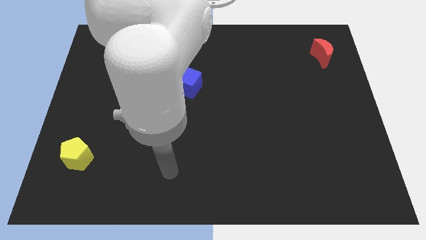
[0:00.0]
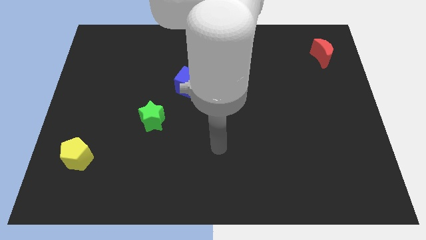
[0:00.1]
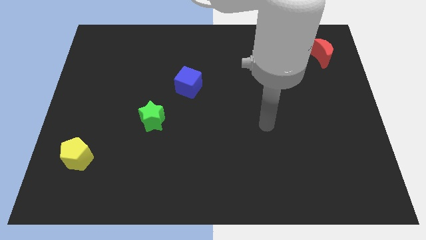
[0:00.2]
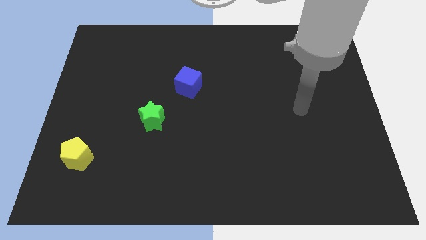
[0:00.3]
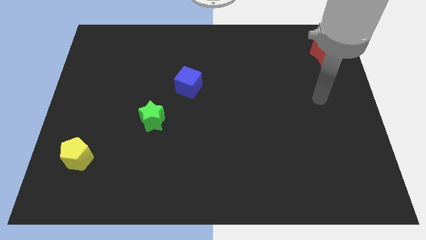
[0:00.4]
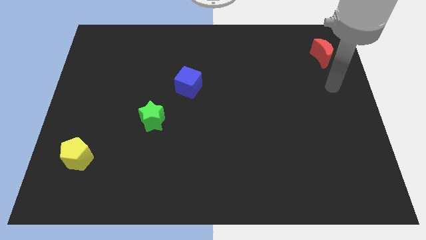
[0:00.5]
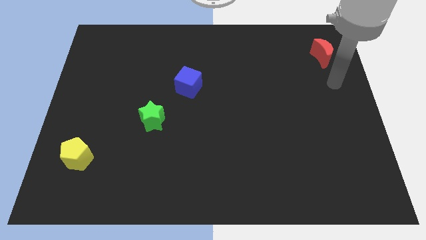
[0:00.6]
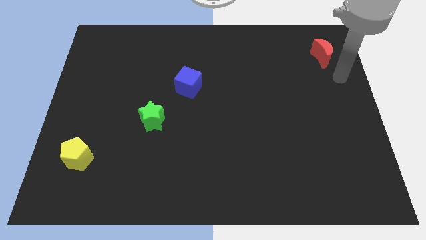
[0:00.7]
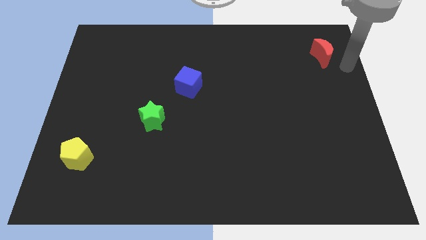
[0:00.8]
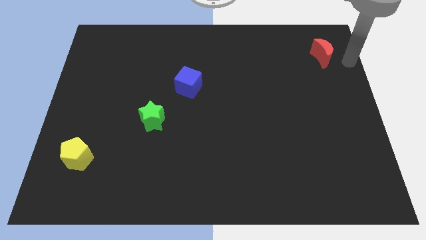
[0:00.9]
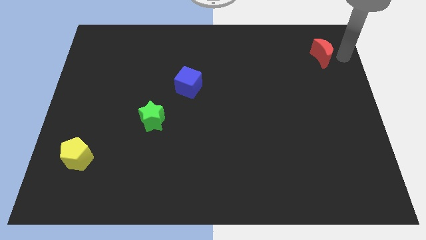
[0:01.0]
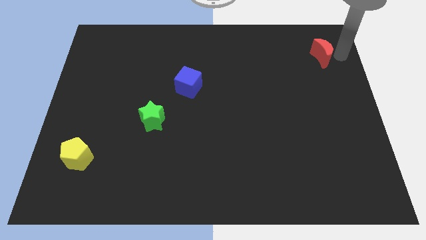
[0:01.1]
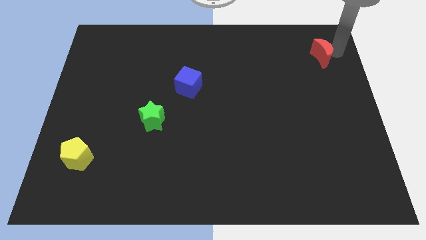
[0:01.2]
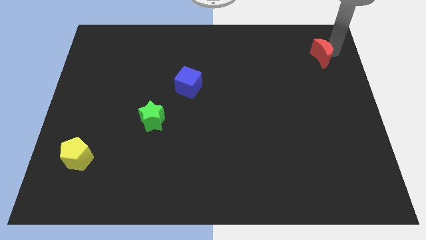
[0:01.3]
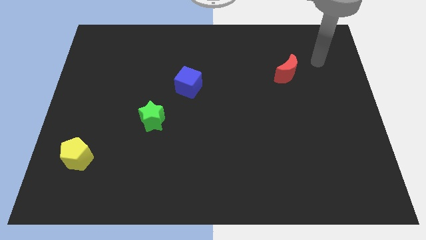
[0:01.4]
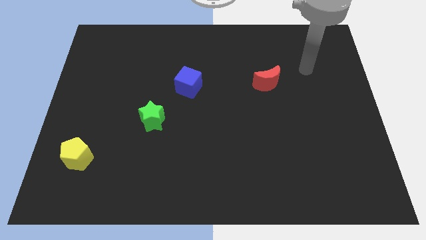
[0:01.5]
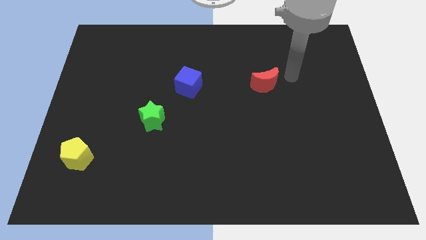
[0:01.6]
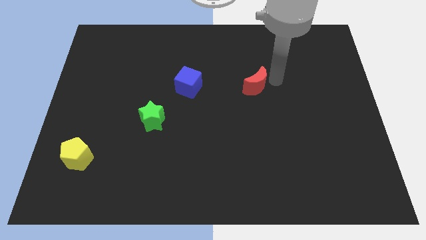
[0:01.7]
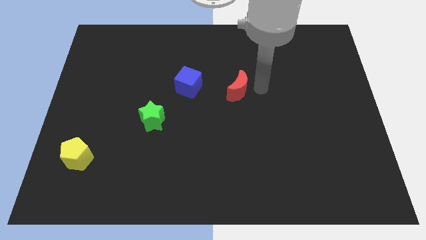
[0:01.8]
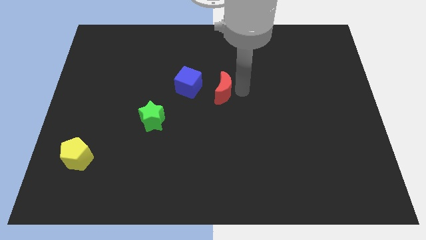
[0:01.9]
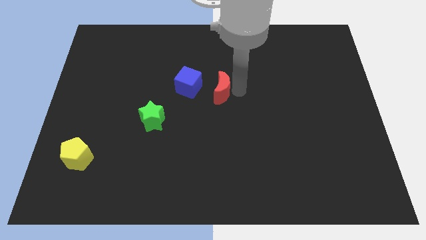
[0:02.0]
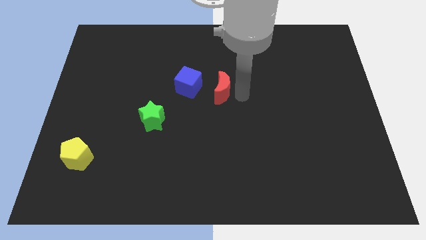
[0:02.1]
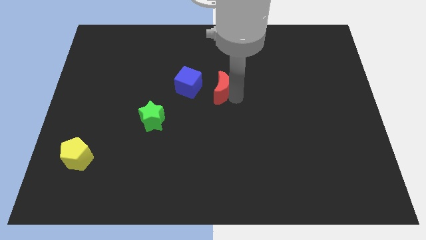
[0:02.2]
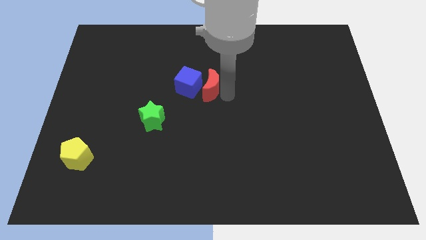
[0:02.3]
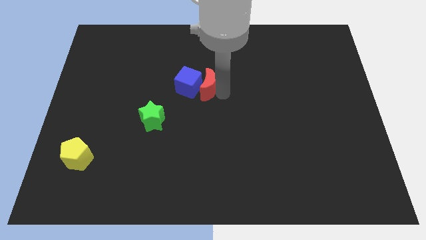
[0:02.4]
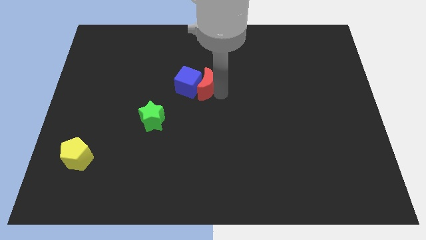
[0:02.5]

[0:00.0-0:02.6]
slide the red moon to the blue cube

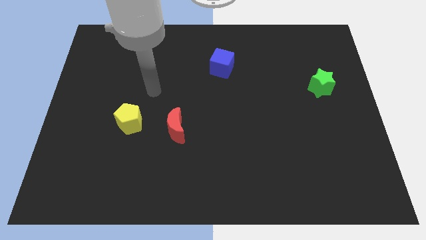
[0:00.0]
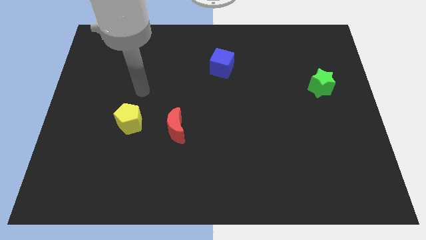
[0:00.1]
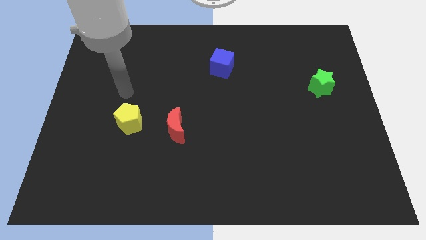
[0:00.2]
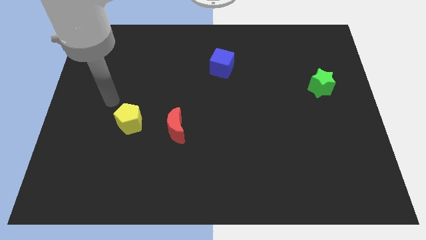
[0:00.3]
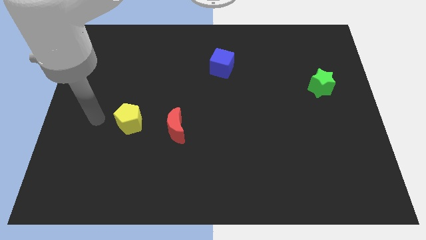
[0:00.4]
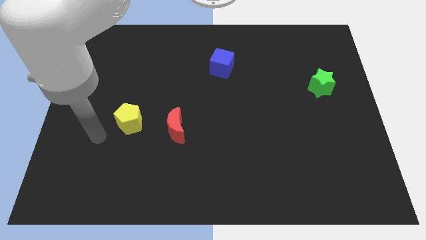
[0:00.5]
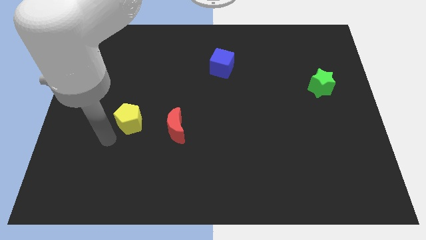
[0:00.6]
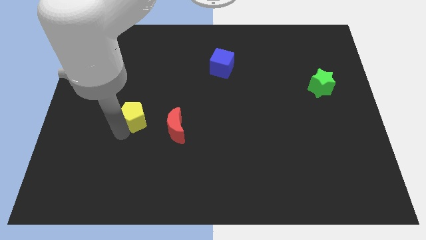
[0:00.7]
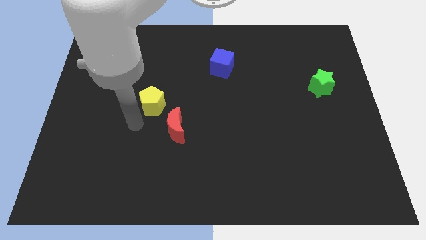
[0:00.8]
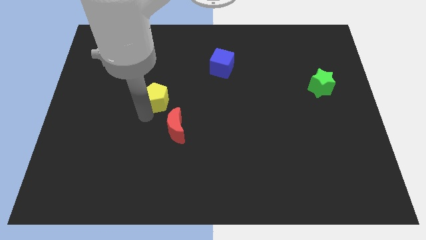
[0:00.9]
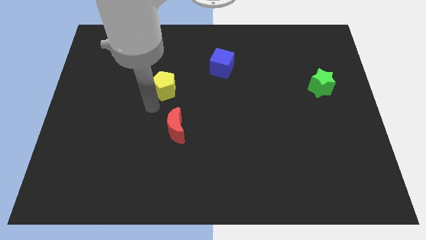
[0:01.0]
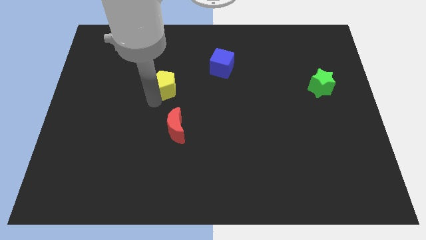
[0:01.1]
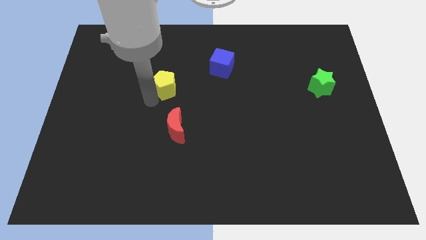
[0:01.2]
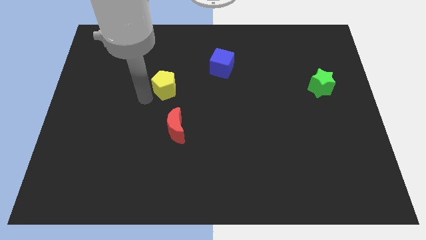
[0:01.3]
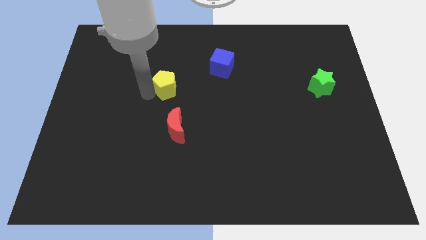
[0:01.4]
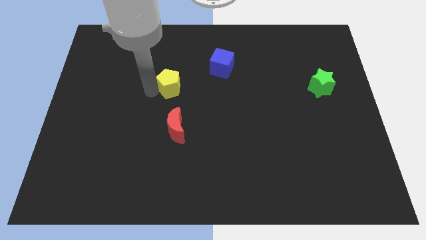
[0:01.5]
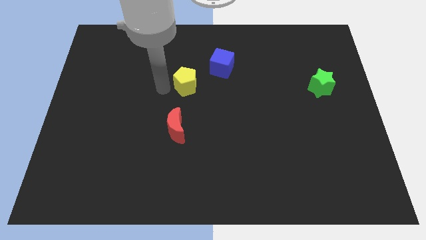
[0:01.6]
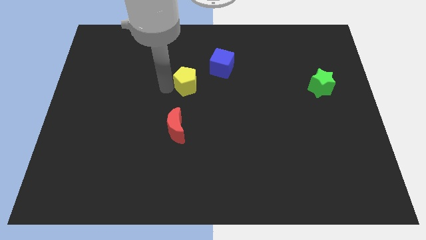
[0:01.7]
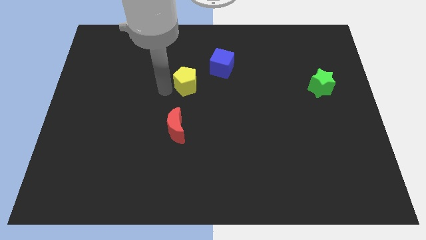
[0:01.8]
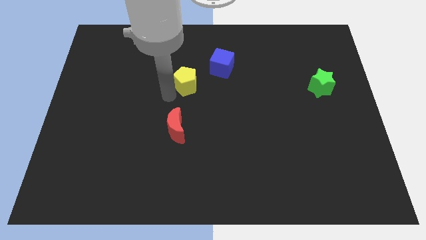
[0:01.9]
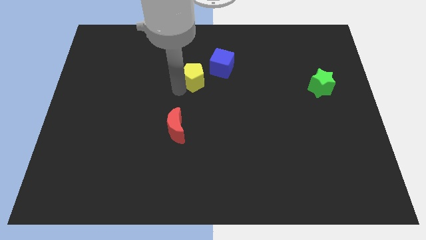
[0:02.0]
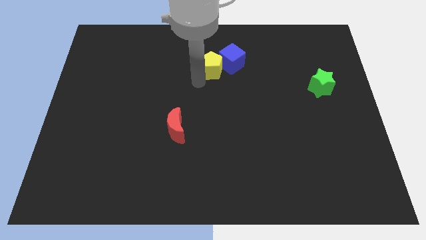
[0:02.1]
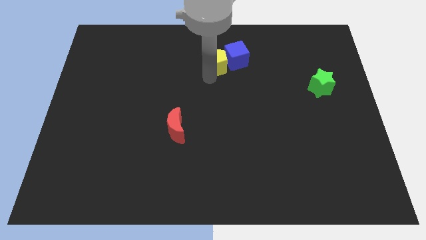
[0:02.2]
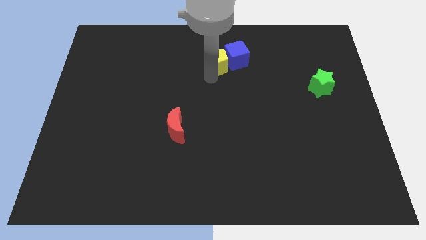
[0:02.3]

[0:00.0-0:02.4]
move the yellow block to the blue block

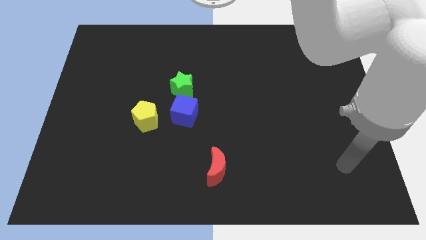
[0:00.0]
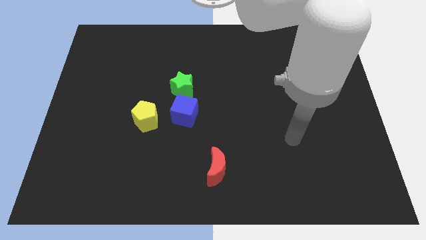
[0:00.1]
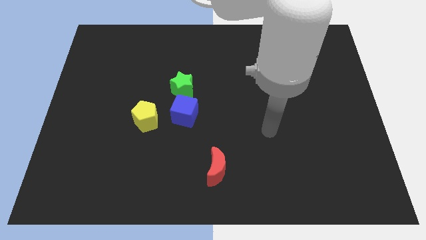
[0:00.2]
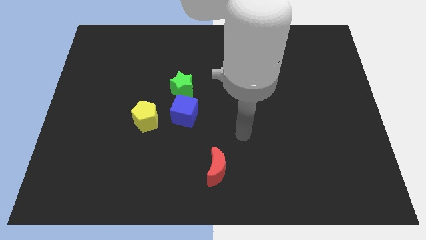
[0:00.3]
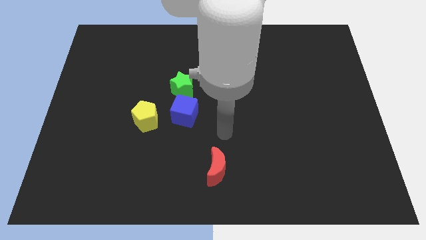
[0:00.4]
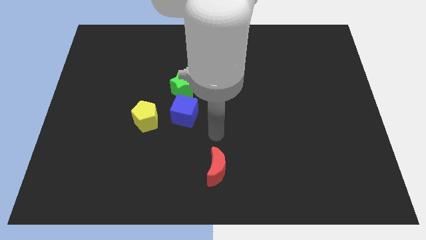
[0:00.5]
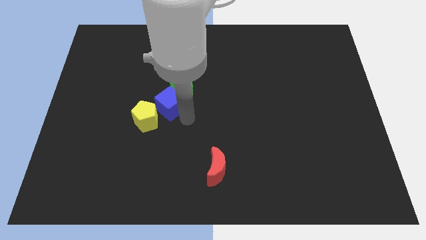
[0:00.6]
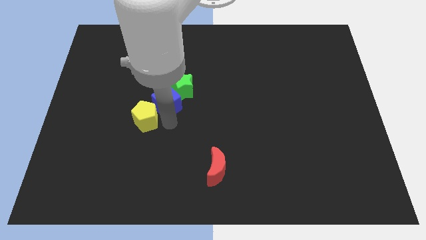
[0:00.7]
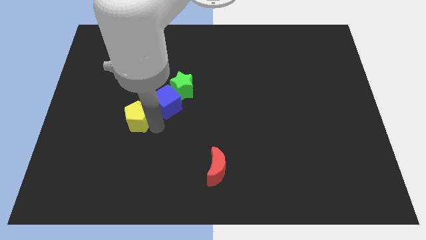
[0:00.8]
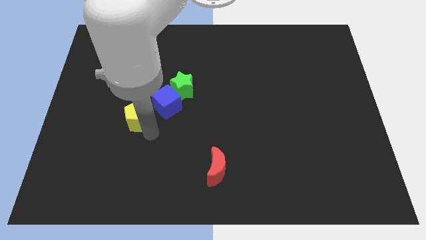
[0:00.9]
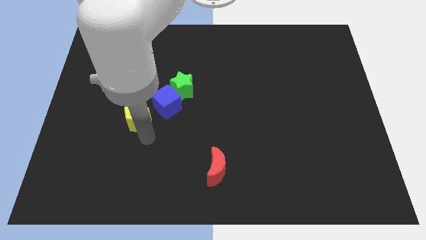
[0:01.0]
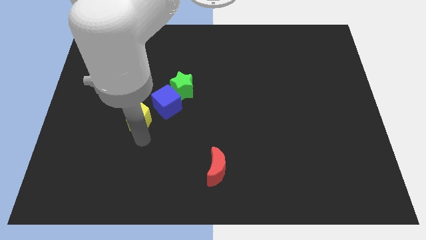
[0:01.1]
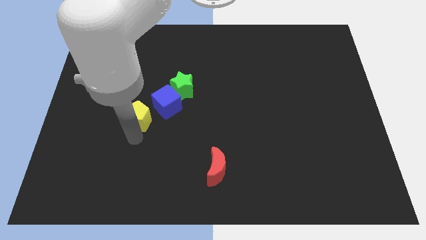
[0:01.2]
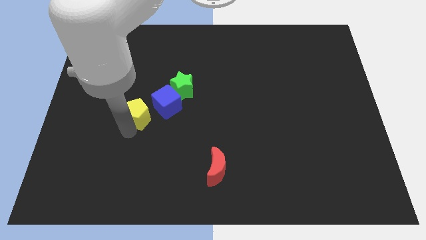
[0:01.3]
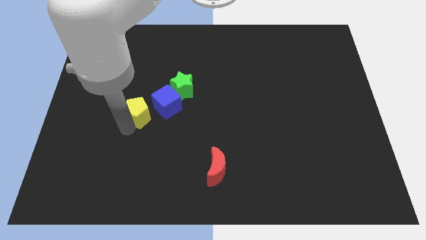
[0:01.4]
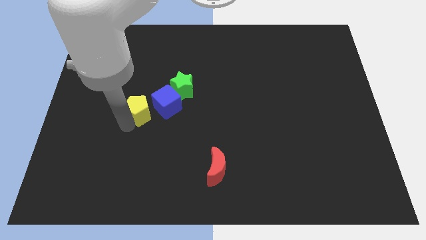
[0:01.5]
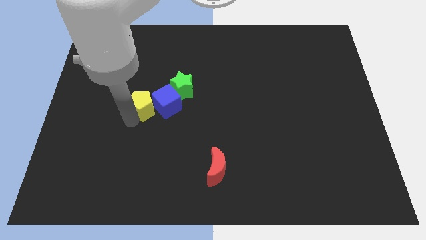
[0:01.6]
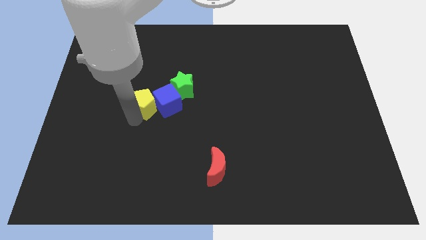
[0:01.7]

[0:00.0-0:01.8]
slide the yellow block to the blue block

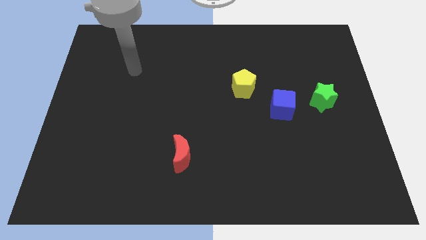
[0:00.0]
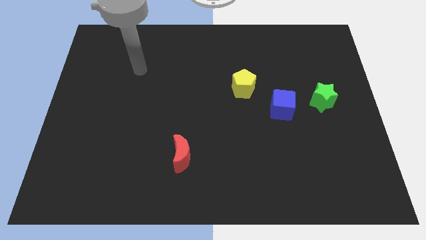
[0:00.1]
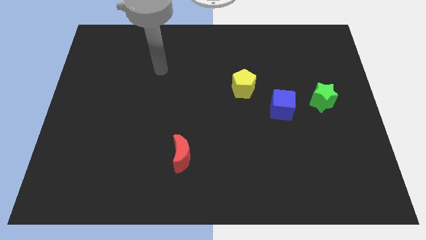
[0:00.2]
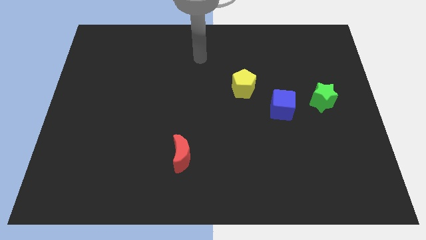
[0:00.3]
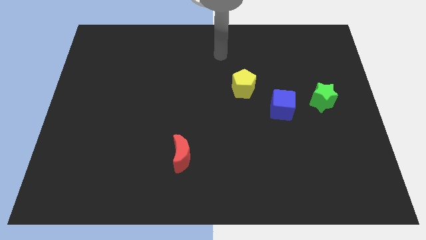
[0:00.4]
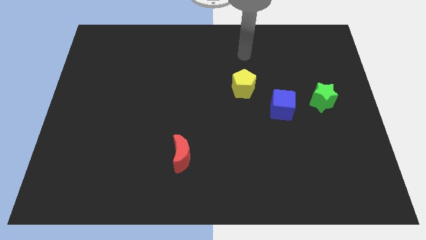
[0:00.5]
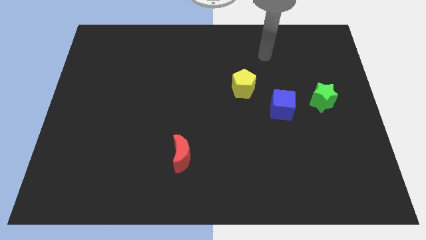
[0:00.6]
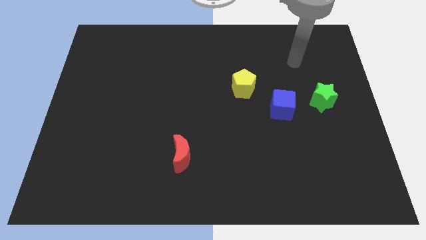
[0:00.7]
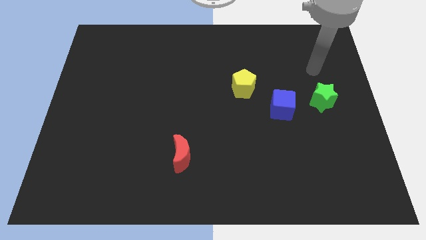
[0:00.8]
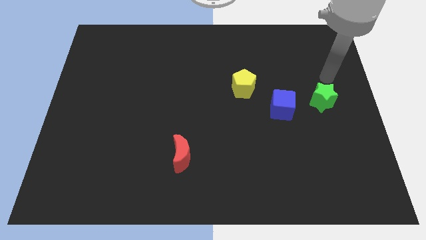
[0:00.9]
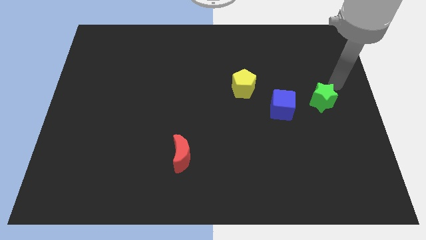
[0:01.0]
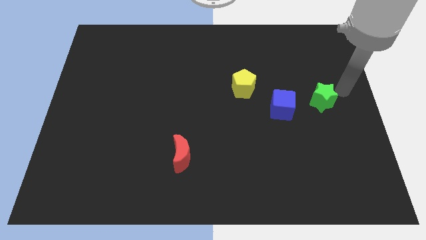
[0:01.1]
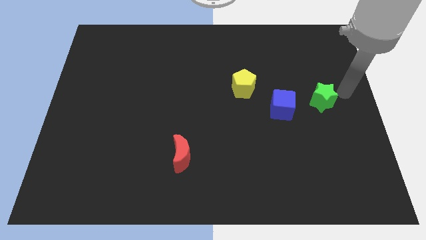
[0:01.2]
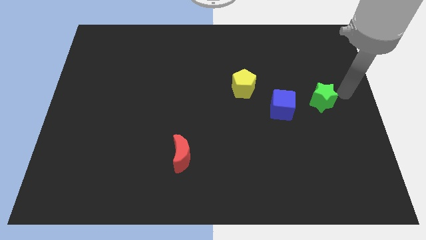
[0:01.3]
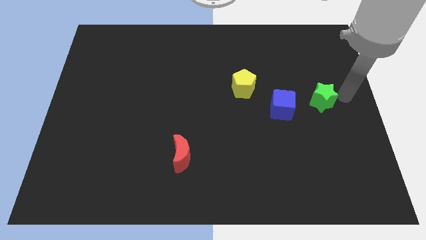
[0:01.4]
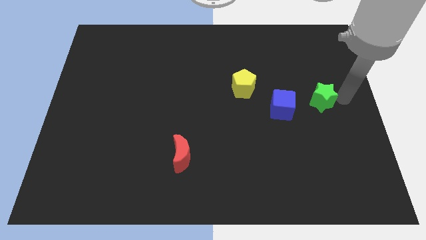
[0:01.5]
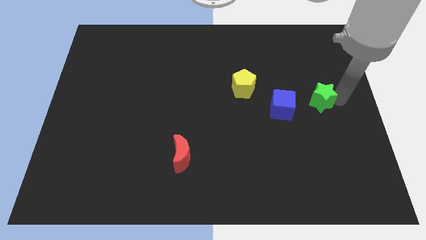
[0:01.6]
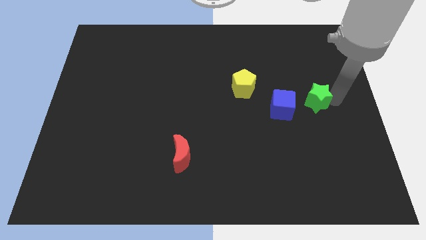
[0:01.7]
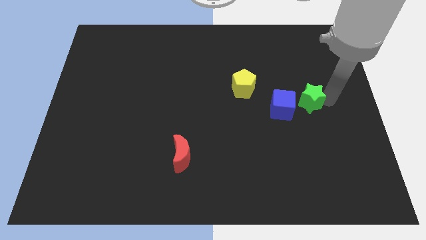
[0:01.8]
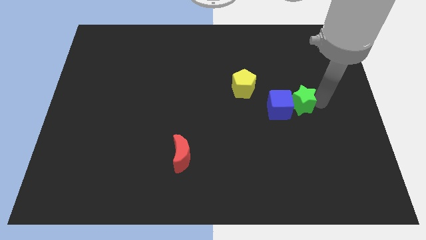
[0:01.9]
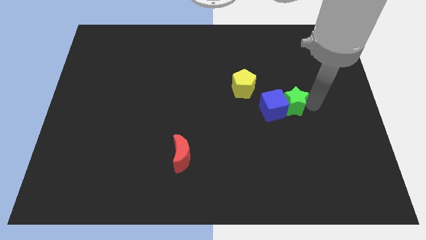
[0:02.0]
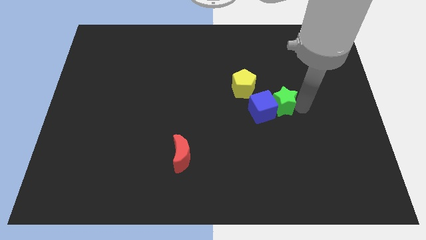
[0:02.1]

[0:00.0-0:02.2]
put the green block towards the cube
